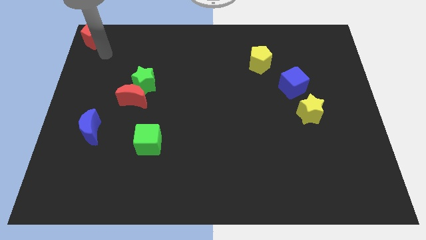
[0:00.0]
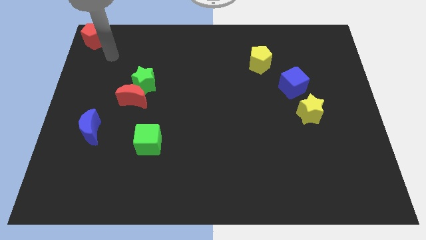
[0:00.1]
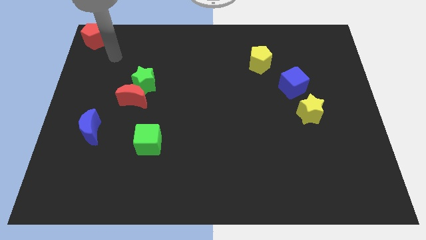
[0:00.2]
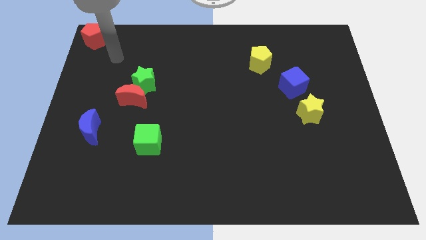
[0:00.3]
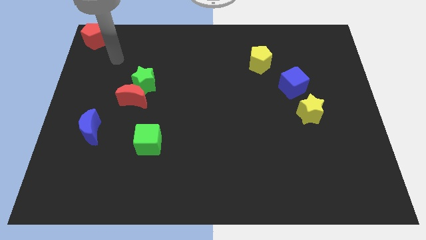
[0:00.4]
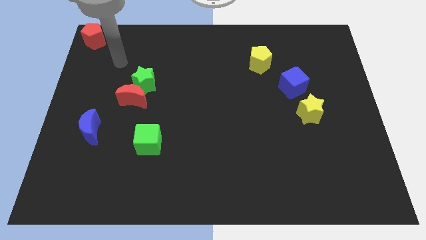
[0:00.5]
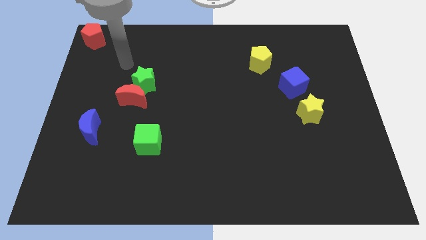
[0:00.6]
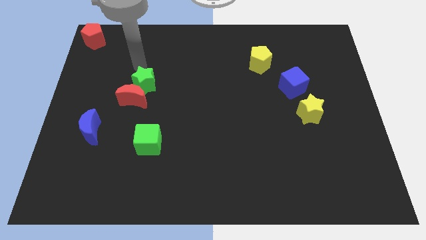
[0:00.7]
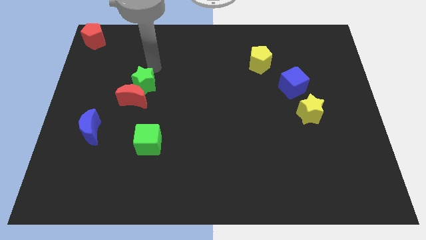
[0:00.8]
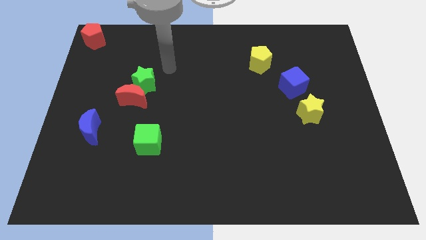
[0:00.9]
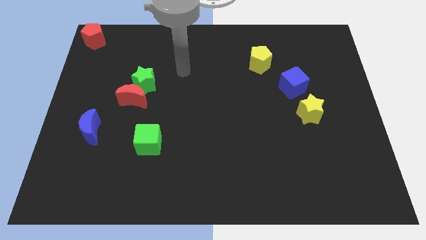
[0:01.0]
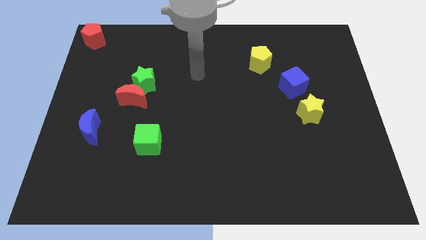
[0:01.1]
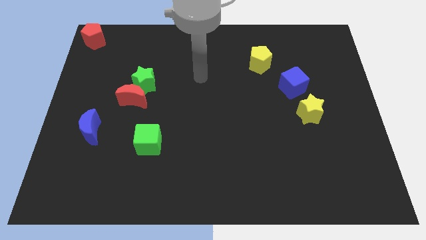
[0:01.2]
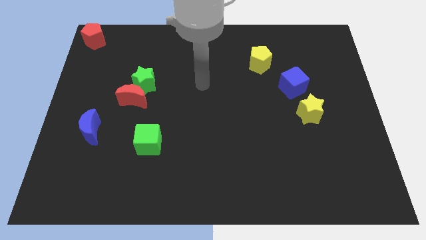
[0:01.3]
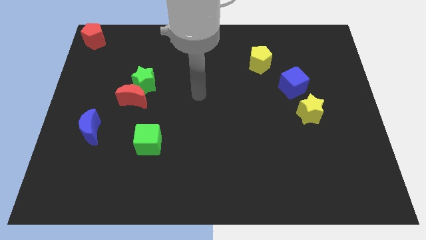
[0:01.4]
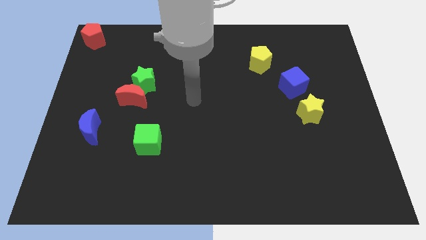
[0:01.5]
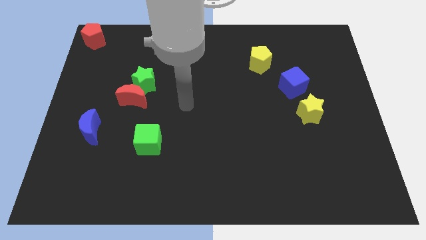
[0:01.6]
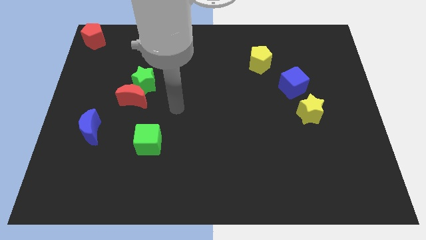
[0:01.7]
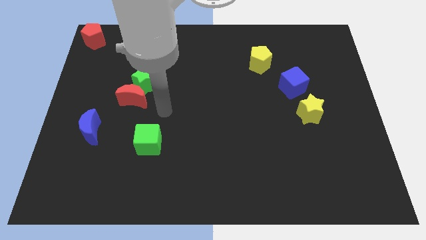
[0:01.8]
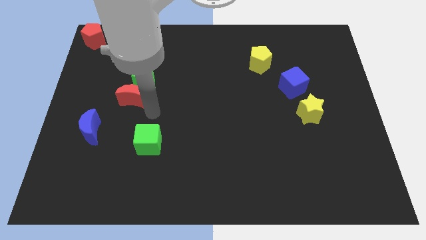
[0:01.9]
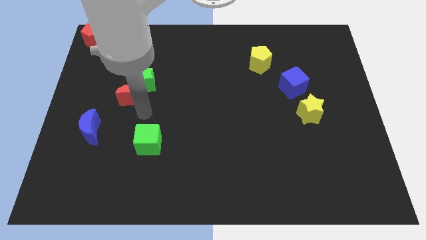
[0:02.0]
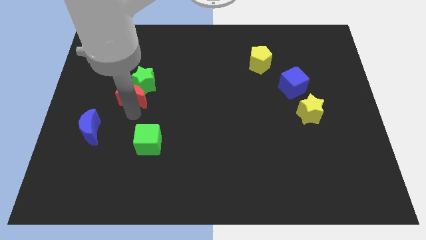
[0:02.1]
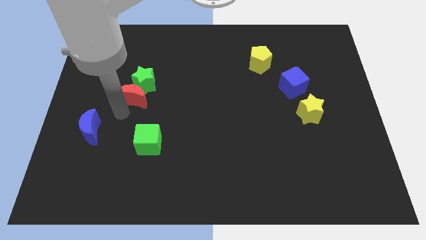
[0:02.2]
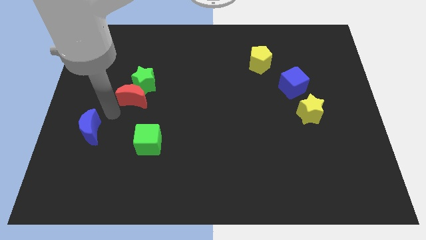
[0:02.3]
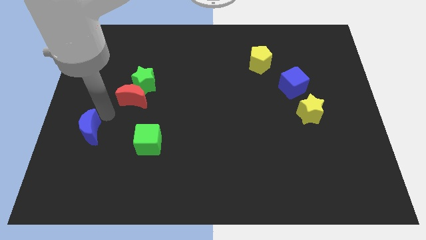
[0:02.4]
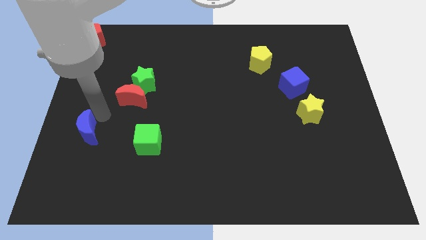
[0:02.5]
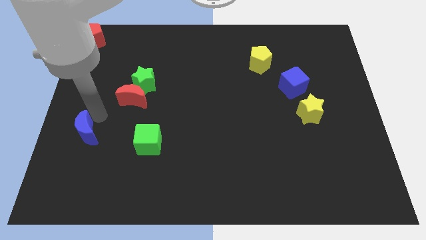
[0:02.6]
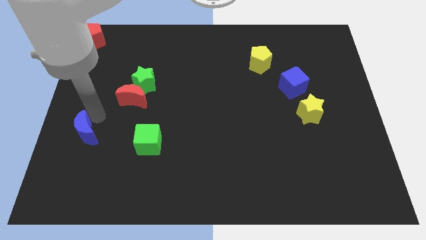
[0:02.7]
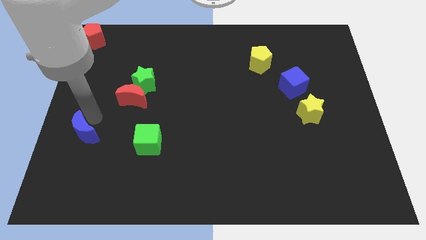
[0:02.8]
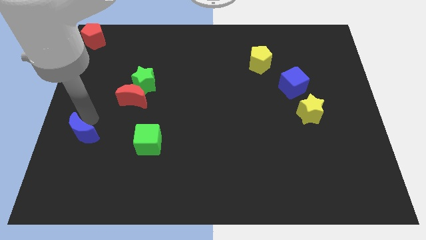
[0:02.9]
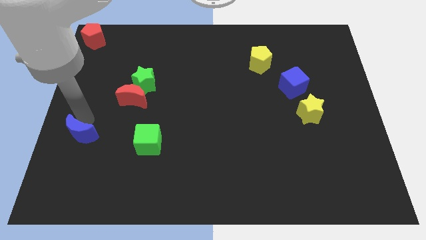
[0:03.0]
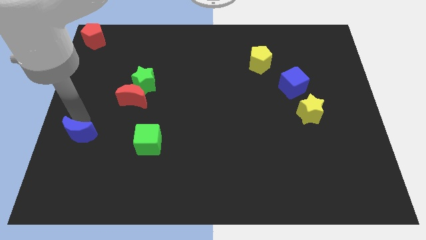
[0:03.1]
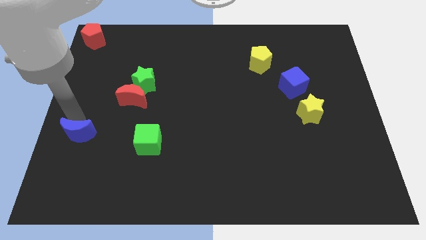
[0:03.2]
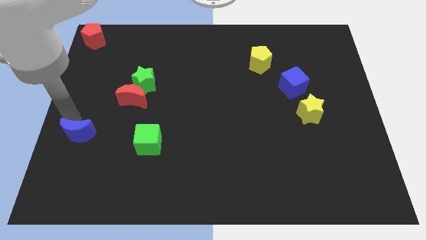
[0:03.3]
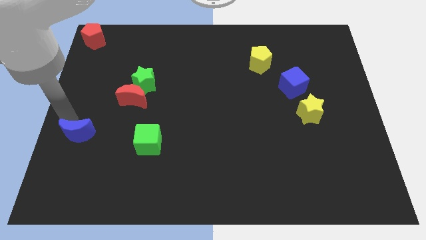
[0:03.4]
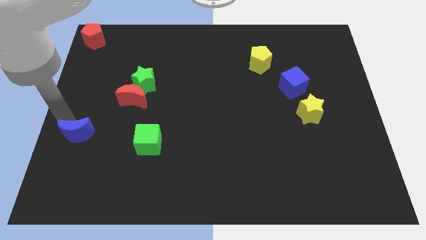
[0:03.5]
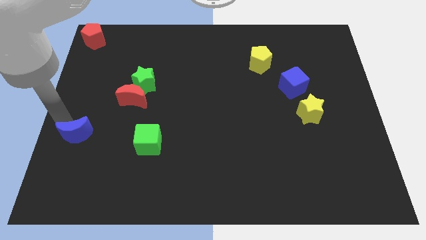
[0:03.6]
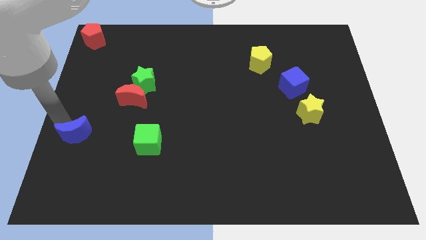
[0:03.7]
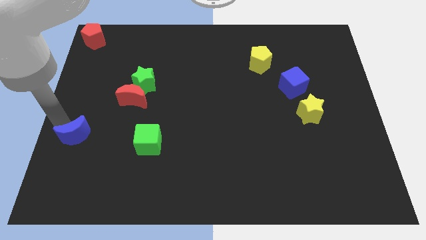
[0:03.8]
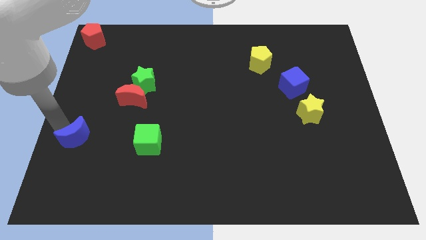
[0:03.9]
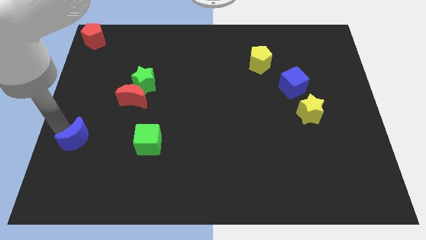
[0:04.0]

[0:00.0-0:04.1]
slightly move the blue moon to the left center of the board

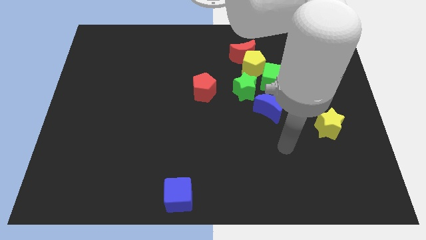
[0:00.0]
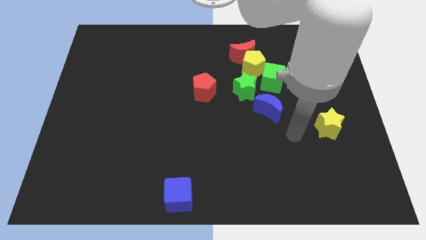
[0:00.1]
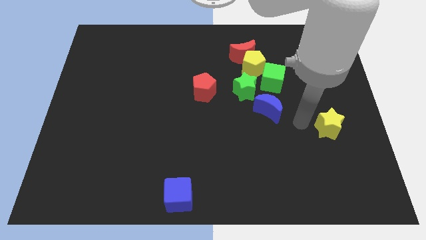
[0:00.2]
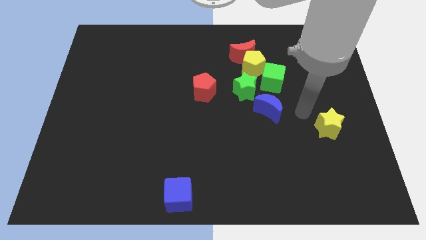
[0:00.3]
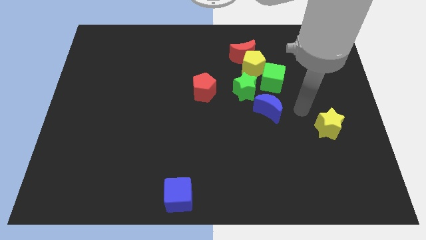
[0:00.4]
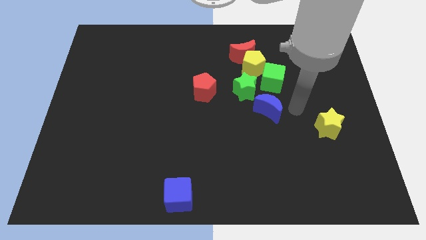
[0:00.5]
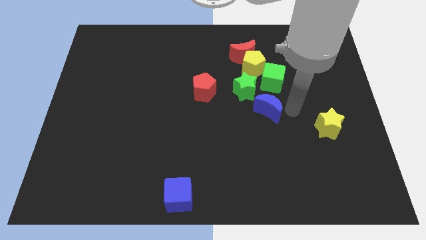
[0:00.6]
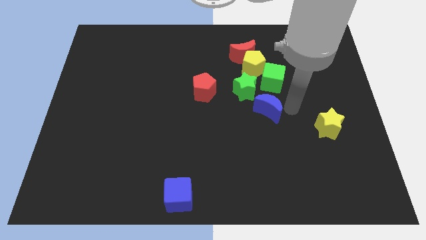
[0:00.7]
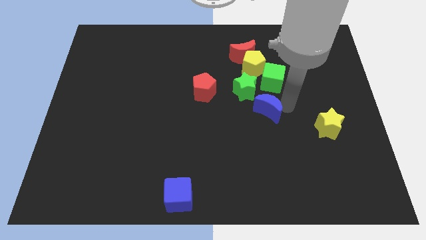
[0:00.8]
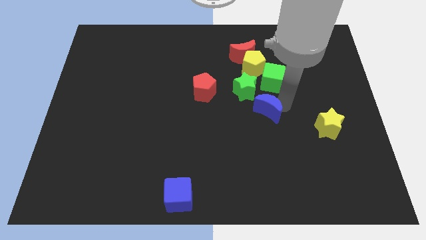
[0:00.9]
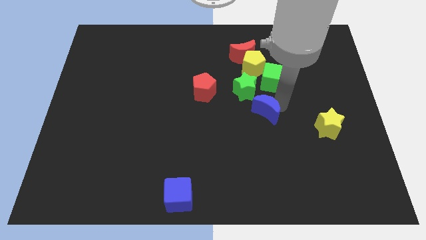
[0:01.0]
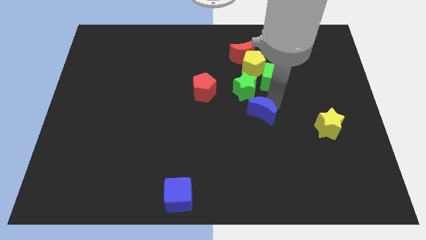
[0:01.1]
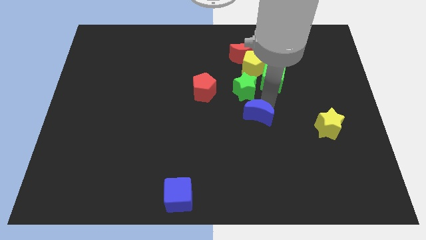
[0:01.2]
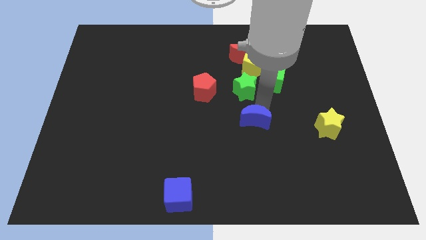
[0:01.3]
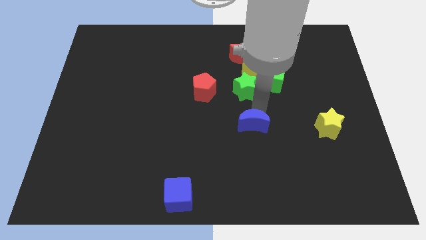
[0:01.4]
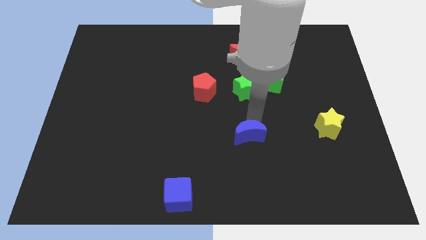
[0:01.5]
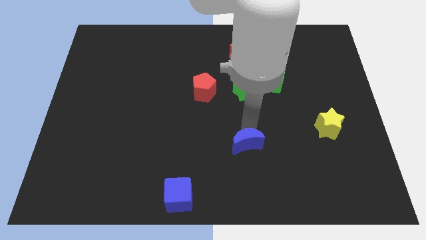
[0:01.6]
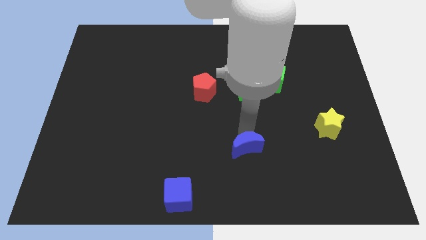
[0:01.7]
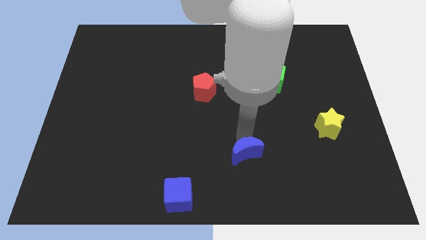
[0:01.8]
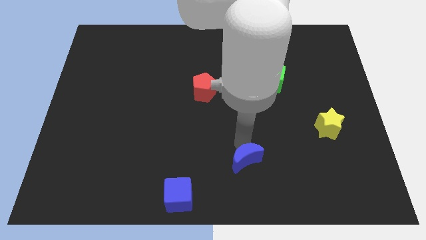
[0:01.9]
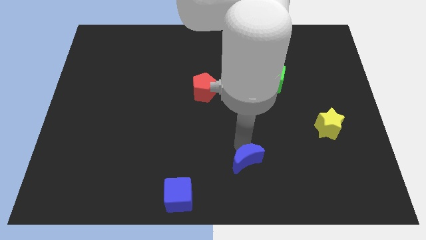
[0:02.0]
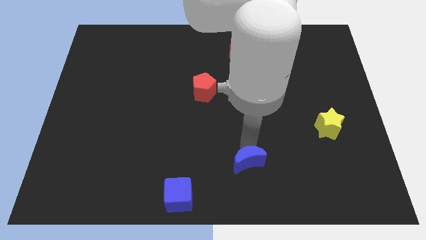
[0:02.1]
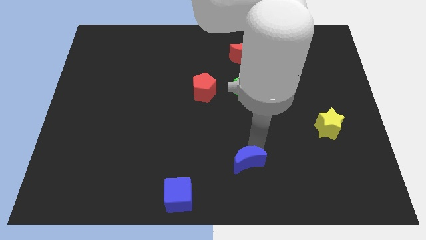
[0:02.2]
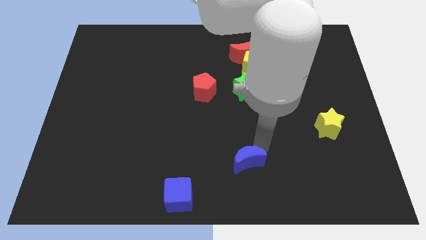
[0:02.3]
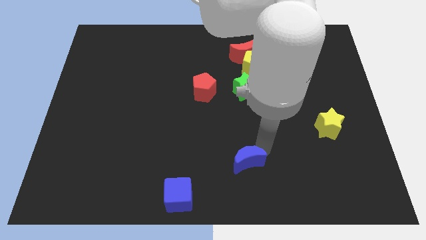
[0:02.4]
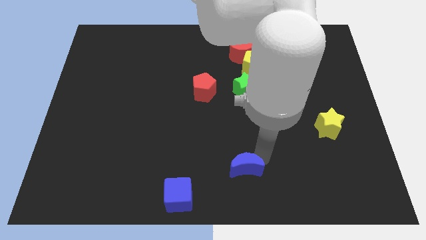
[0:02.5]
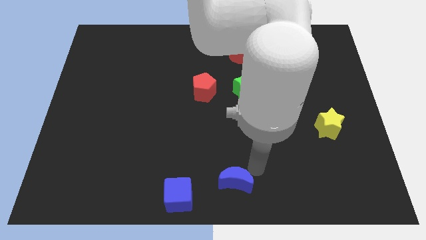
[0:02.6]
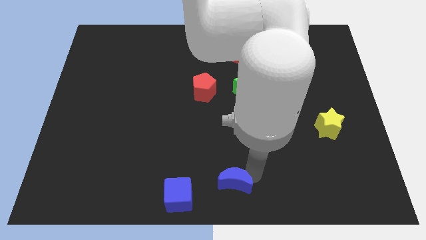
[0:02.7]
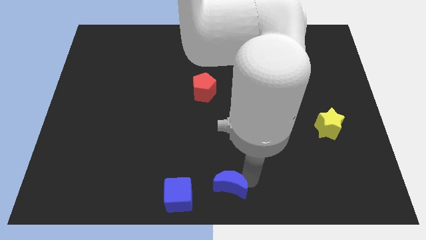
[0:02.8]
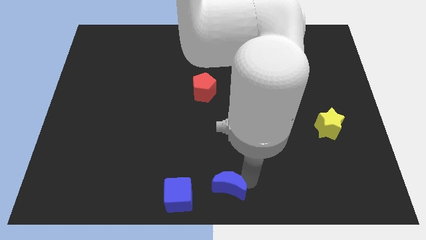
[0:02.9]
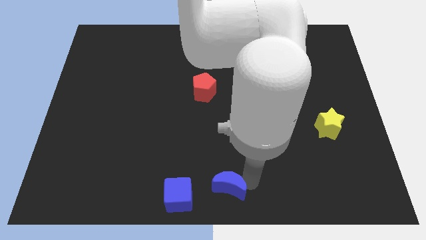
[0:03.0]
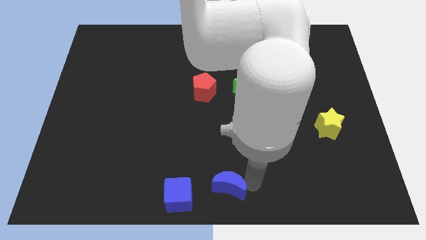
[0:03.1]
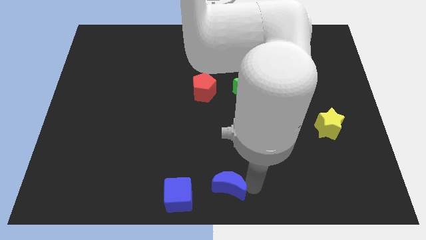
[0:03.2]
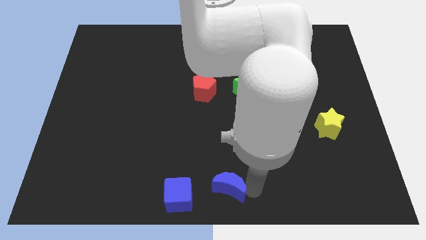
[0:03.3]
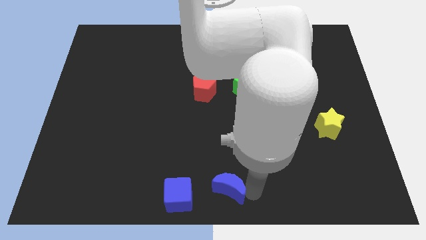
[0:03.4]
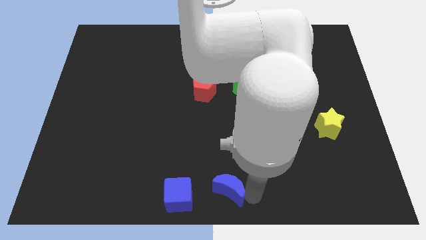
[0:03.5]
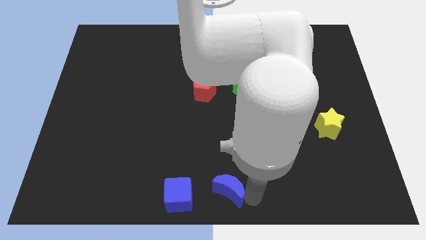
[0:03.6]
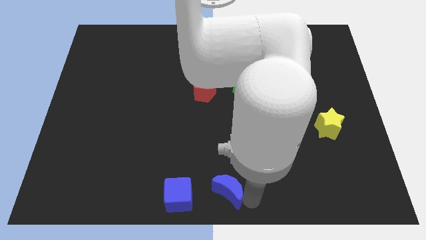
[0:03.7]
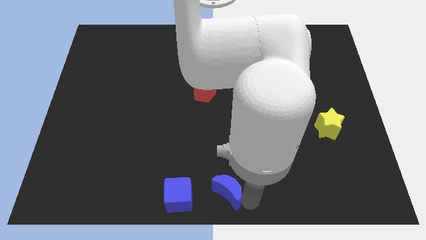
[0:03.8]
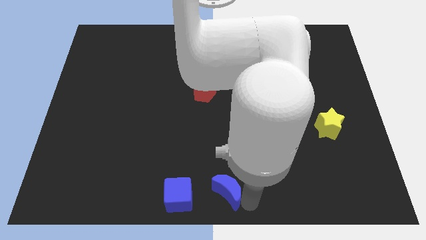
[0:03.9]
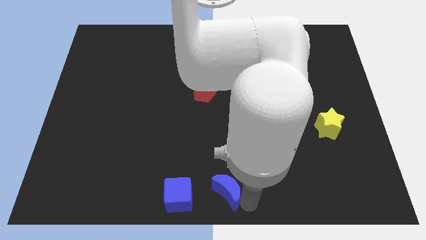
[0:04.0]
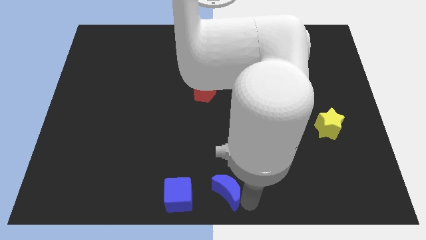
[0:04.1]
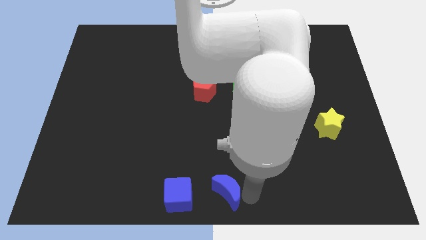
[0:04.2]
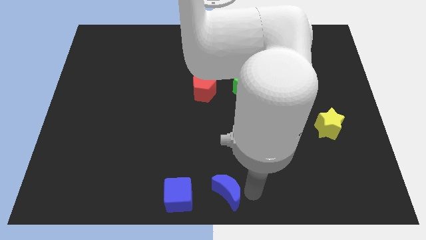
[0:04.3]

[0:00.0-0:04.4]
push the blue moon to the right of the blue cube

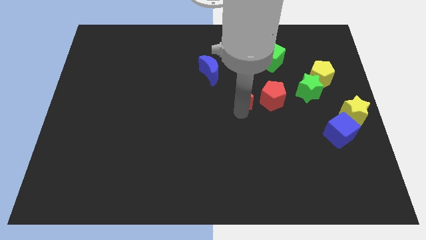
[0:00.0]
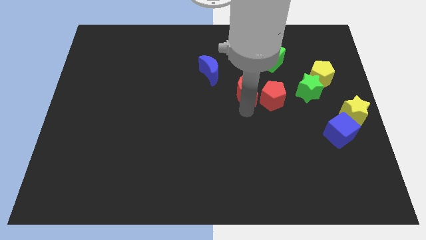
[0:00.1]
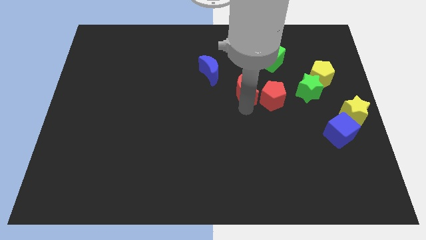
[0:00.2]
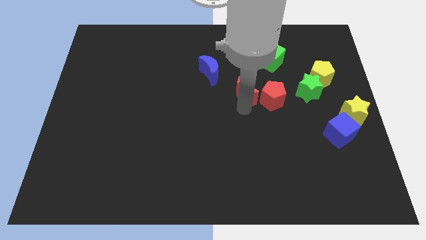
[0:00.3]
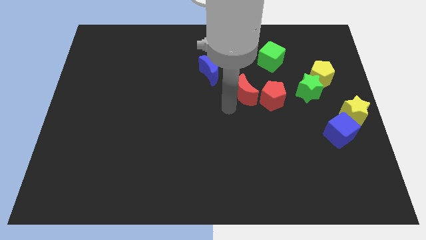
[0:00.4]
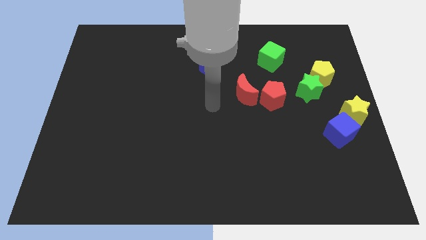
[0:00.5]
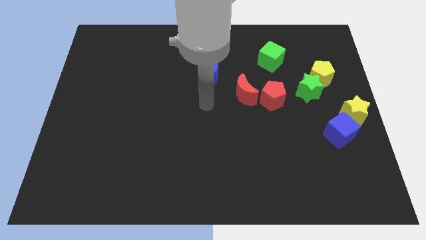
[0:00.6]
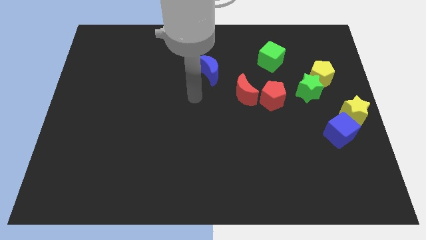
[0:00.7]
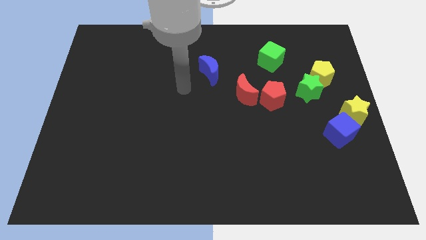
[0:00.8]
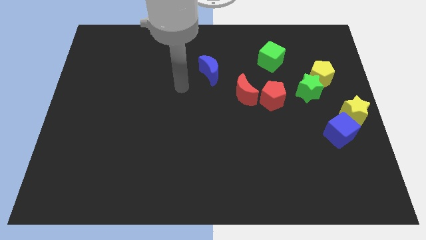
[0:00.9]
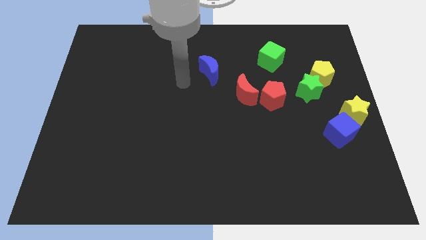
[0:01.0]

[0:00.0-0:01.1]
move the red crescent to the left beside red pentagon
